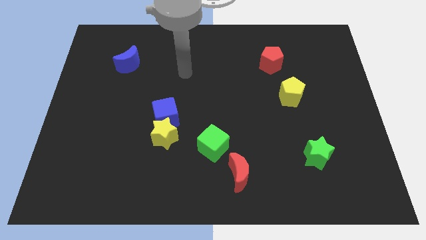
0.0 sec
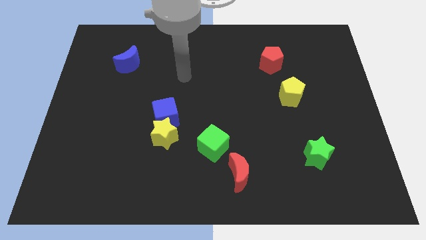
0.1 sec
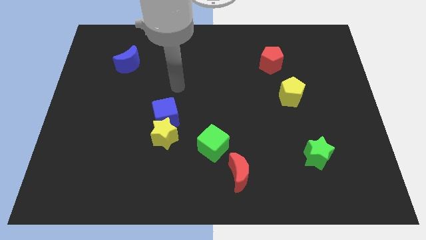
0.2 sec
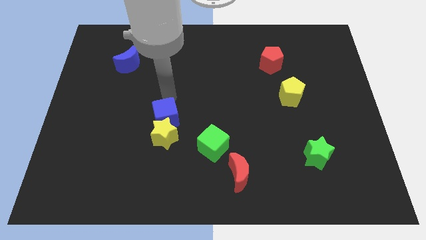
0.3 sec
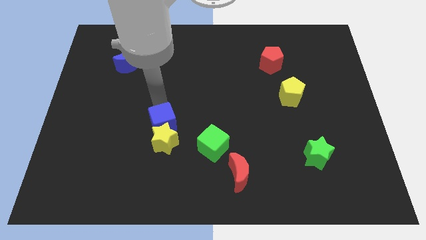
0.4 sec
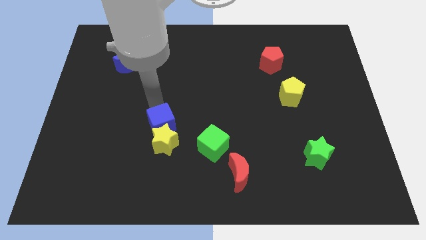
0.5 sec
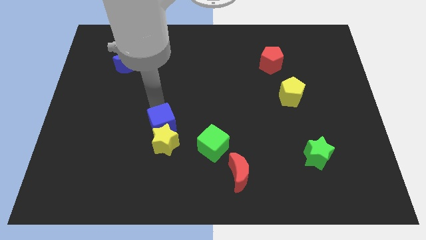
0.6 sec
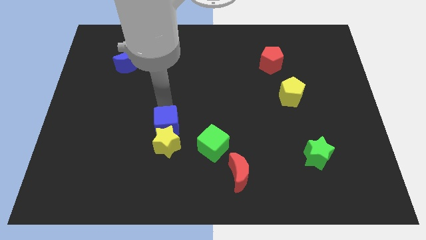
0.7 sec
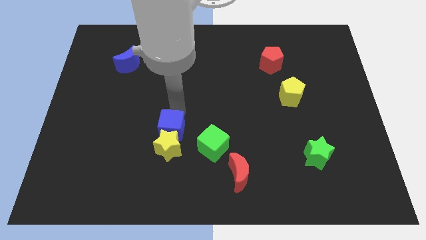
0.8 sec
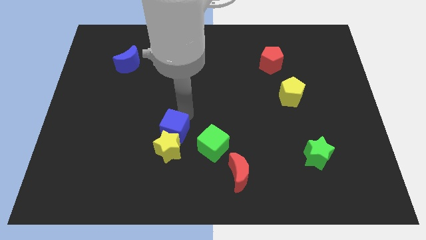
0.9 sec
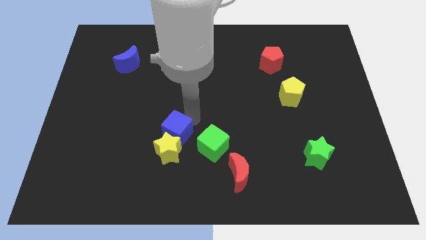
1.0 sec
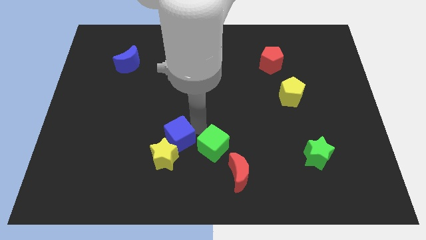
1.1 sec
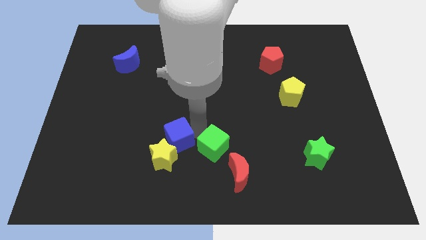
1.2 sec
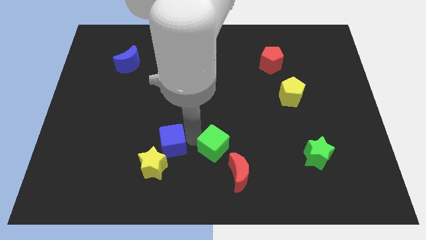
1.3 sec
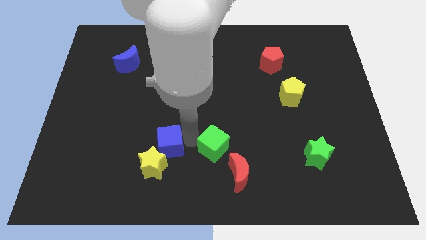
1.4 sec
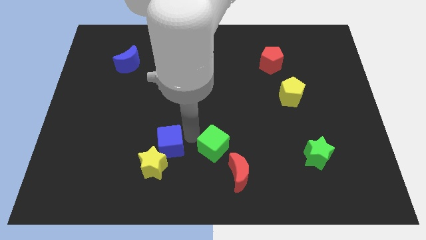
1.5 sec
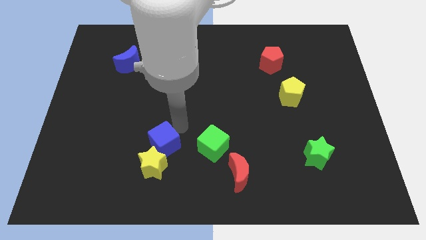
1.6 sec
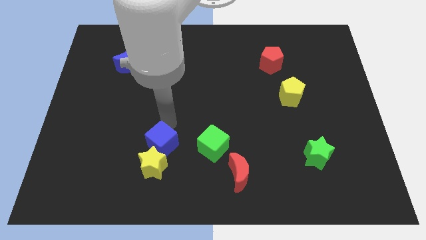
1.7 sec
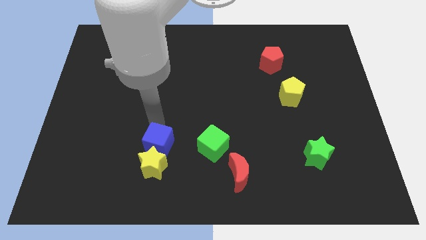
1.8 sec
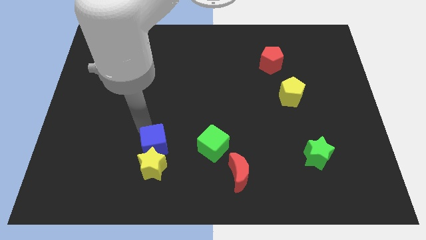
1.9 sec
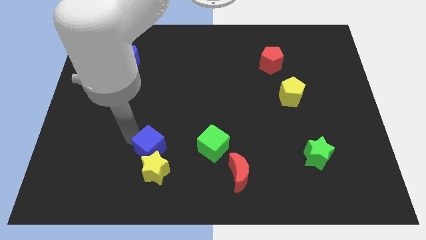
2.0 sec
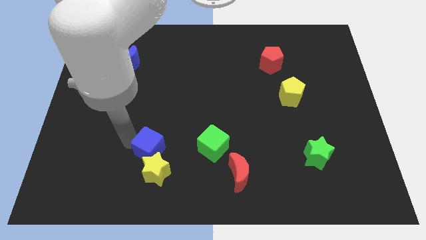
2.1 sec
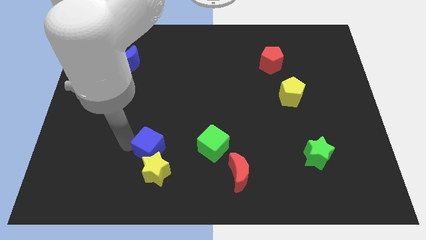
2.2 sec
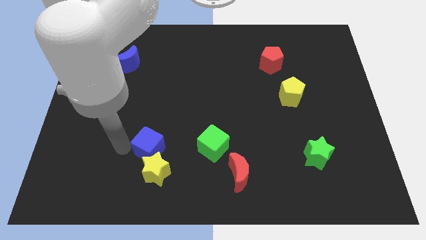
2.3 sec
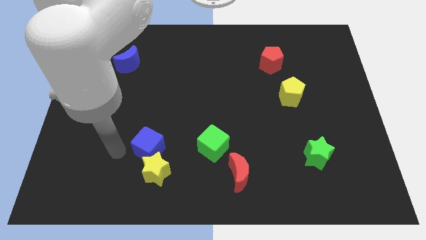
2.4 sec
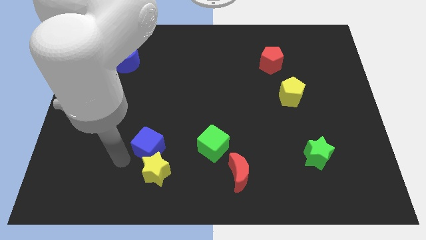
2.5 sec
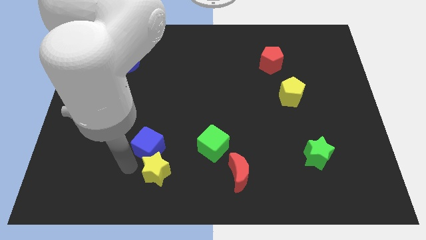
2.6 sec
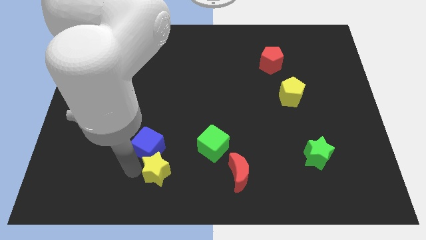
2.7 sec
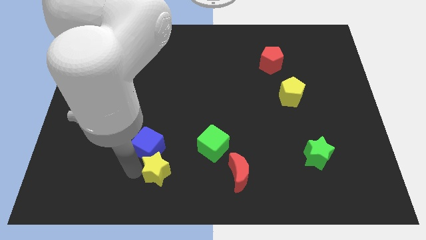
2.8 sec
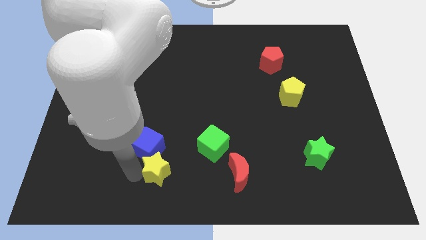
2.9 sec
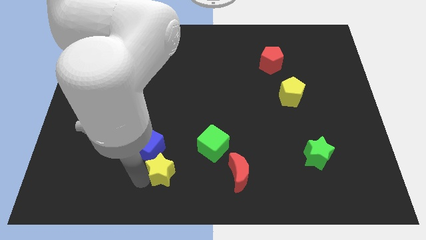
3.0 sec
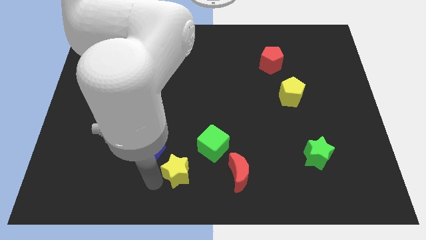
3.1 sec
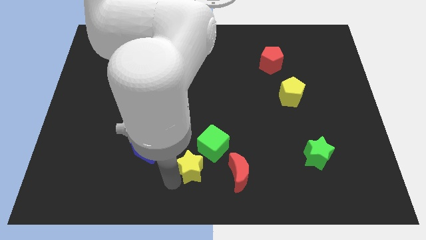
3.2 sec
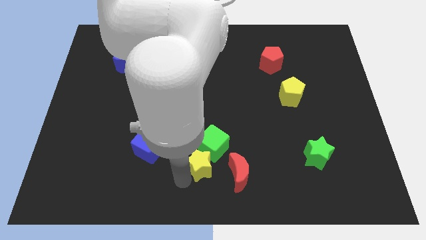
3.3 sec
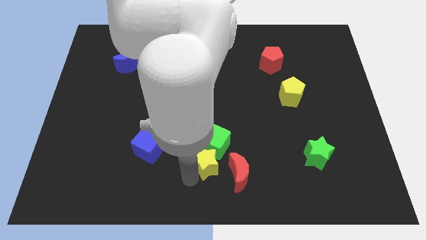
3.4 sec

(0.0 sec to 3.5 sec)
place yellow star to the bottom of green cube

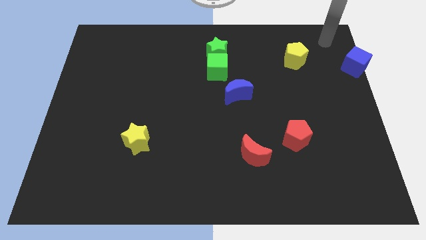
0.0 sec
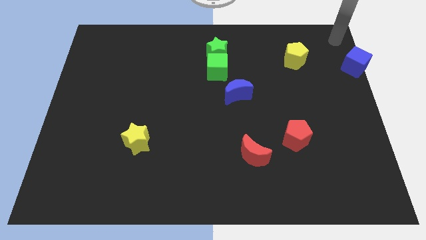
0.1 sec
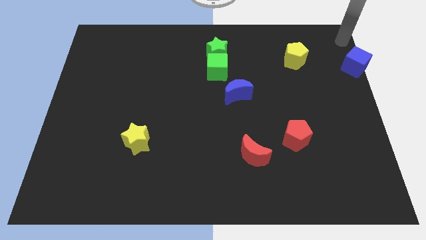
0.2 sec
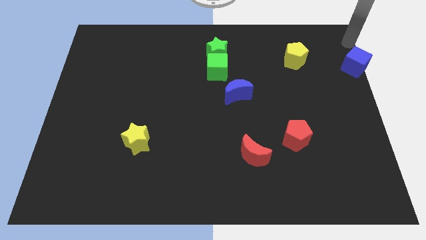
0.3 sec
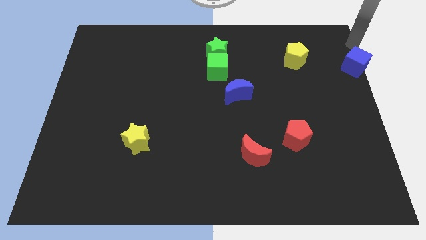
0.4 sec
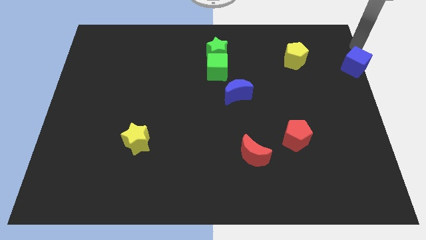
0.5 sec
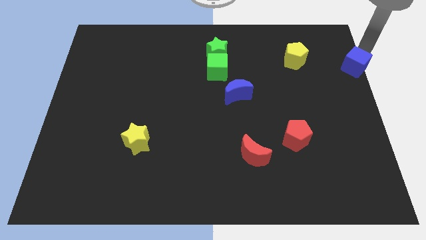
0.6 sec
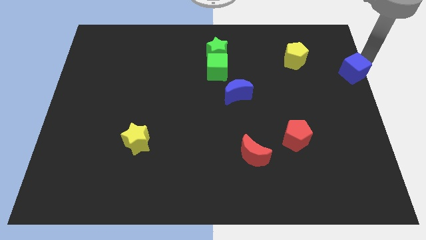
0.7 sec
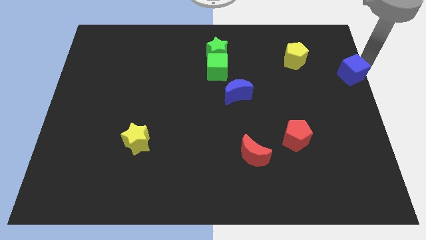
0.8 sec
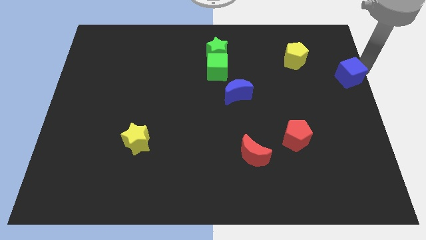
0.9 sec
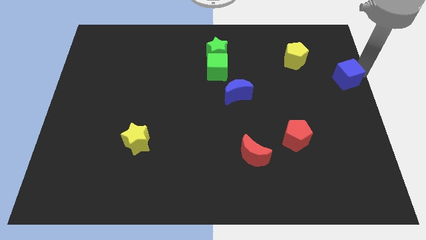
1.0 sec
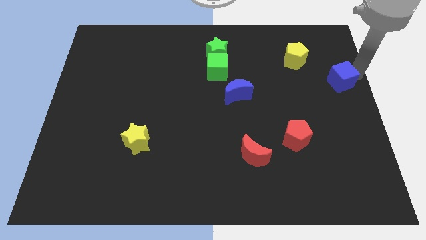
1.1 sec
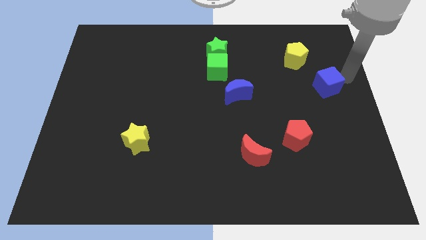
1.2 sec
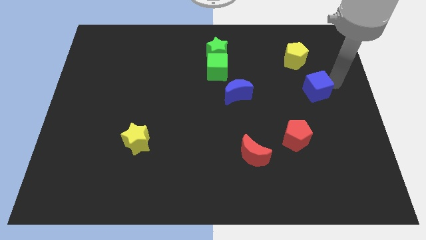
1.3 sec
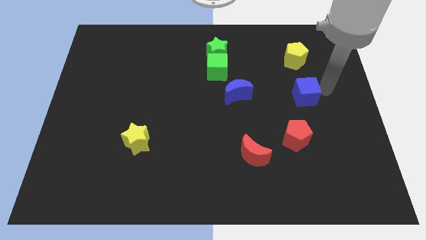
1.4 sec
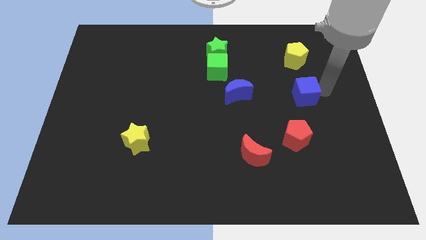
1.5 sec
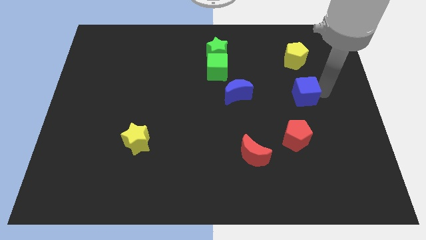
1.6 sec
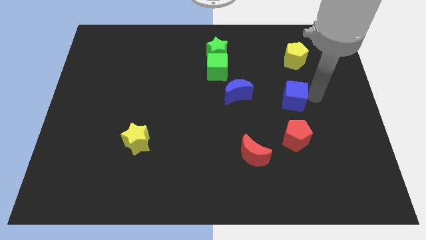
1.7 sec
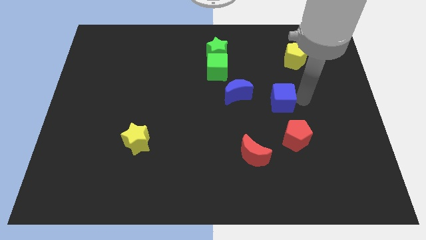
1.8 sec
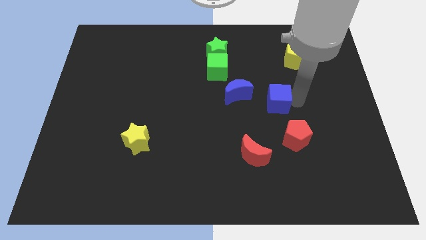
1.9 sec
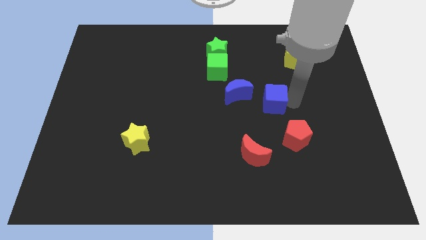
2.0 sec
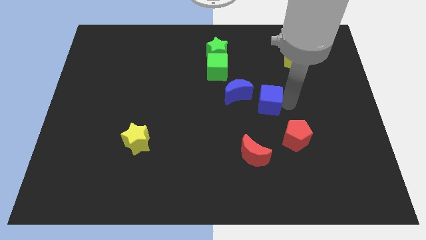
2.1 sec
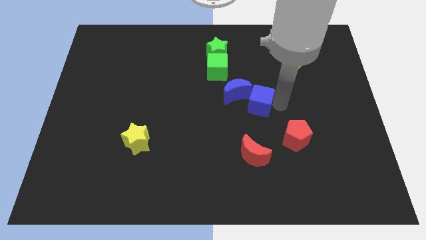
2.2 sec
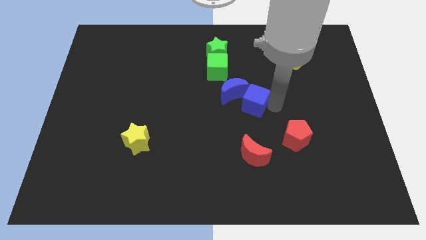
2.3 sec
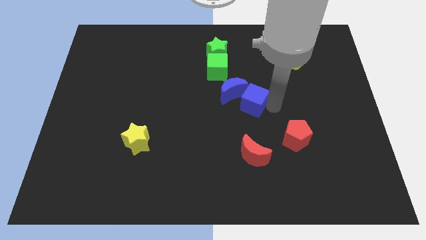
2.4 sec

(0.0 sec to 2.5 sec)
move blue cube into blue crescent

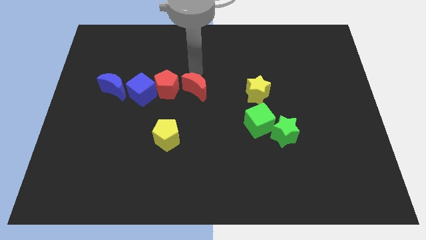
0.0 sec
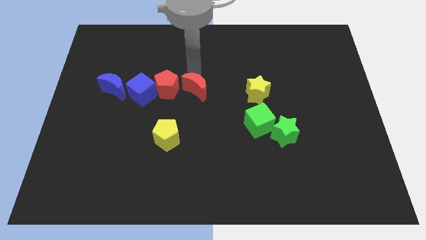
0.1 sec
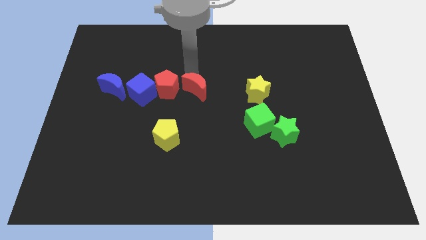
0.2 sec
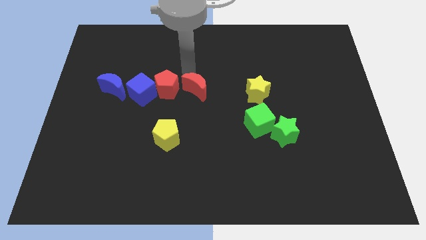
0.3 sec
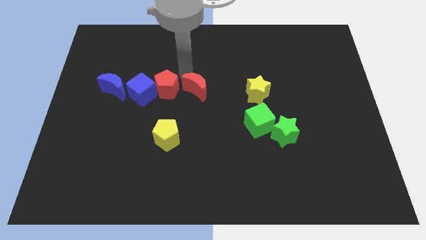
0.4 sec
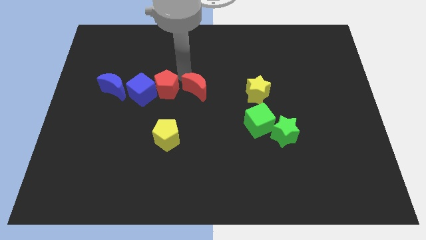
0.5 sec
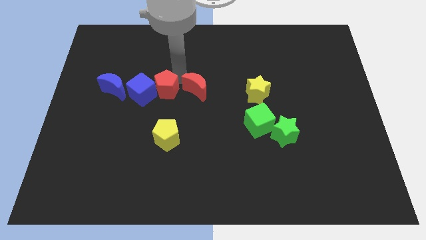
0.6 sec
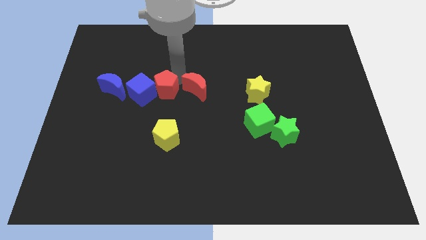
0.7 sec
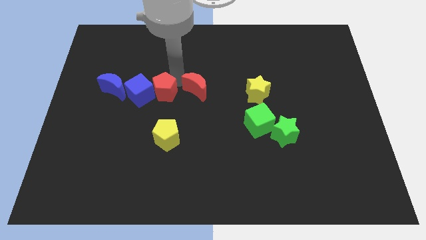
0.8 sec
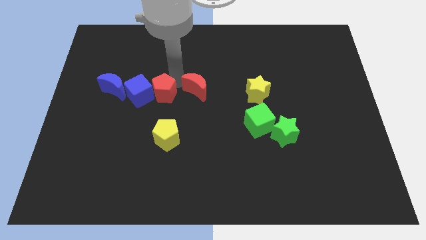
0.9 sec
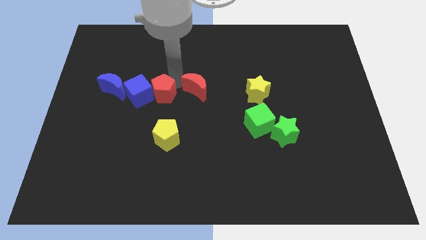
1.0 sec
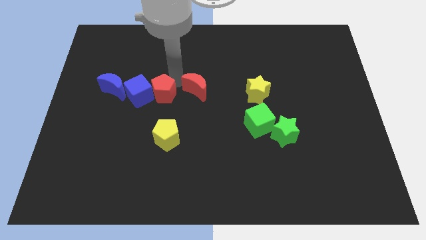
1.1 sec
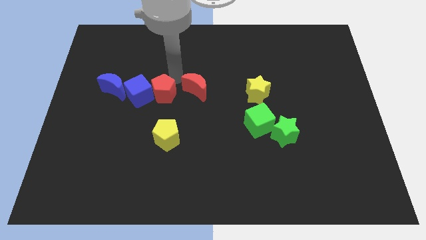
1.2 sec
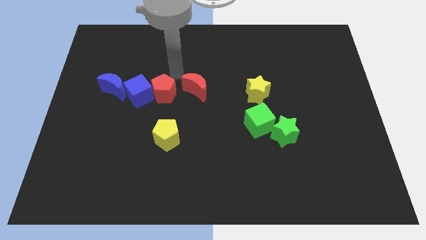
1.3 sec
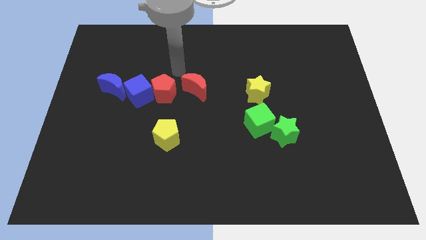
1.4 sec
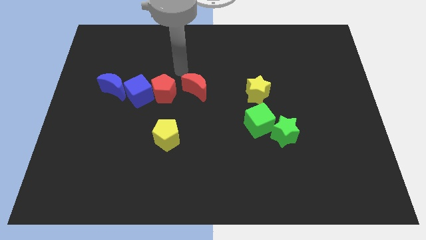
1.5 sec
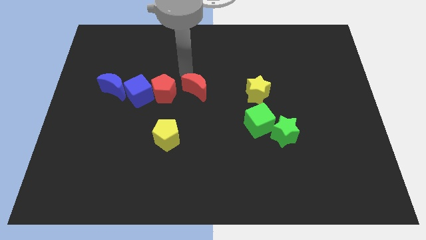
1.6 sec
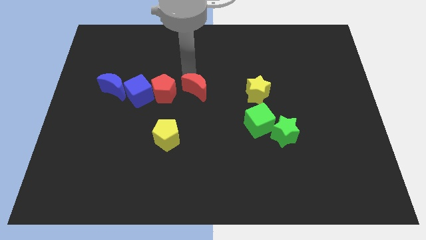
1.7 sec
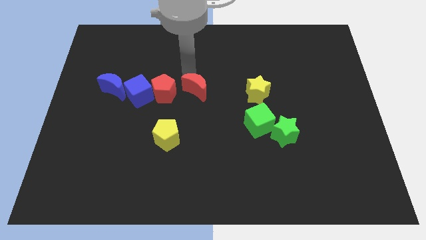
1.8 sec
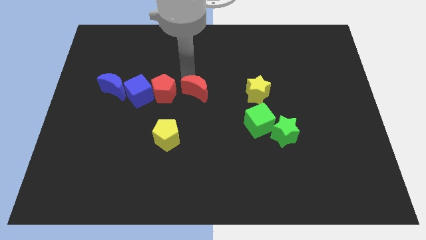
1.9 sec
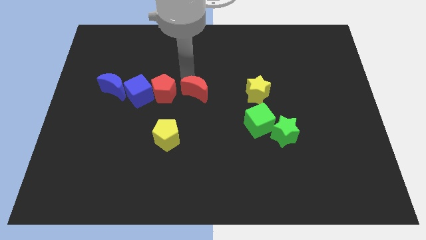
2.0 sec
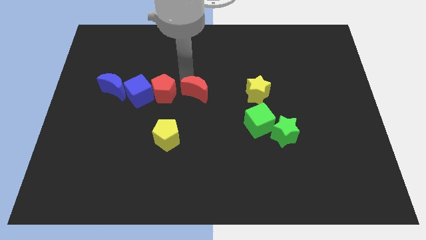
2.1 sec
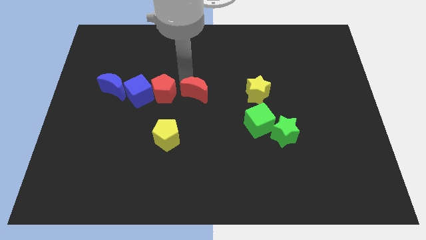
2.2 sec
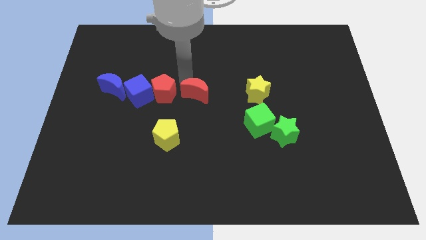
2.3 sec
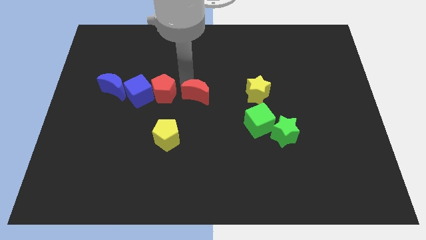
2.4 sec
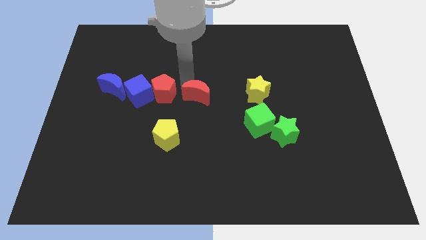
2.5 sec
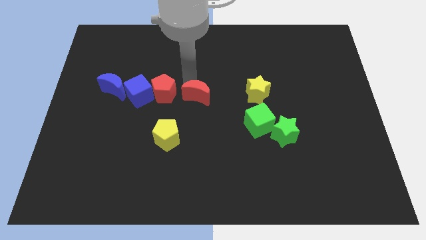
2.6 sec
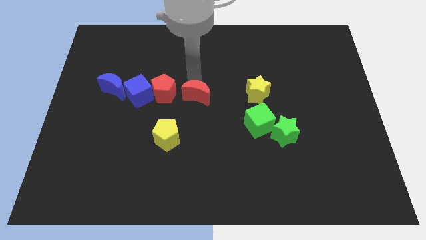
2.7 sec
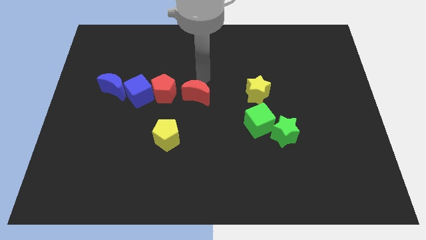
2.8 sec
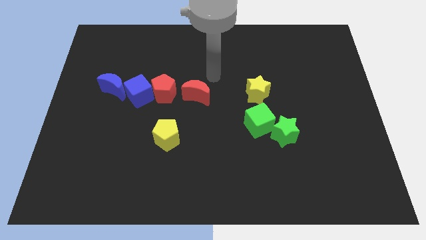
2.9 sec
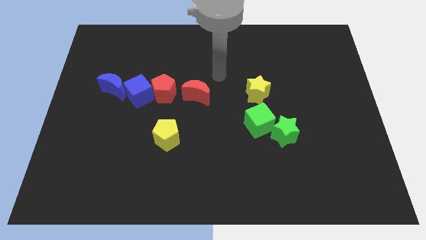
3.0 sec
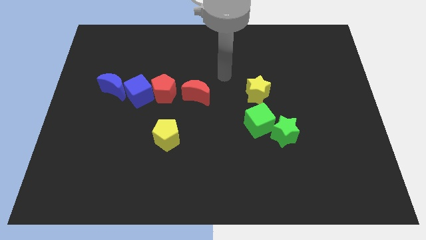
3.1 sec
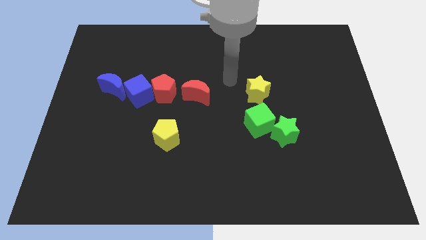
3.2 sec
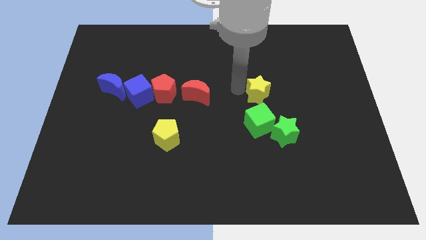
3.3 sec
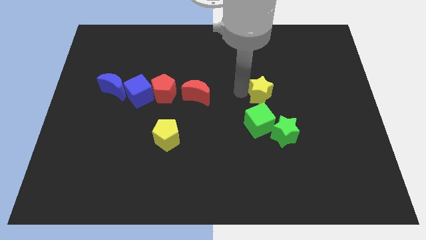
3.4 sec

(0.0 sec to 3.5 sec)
move your arm away from the red moon
